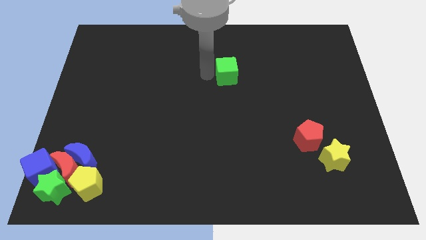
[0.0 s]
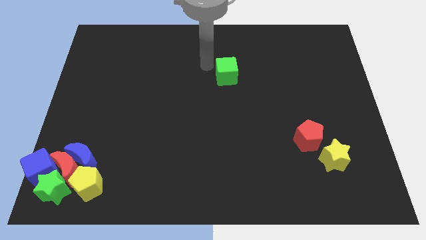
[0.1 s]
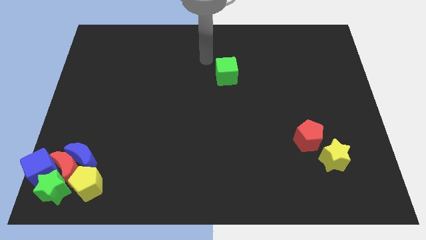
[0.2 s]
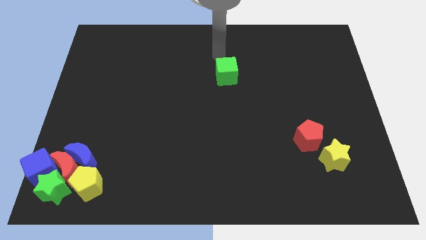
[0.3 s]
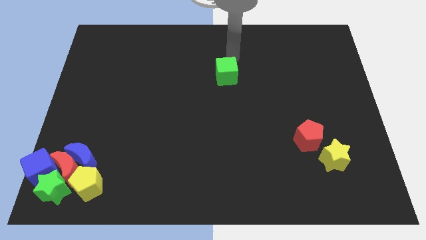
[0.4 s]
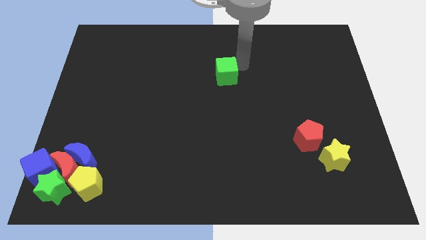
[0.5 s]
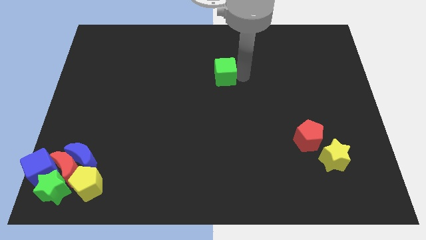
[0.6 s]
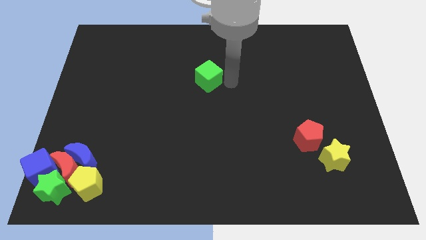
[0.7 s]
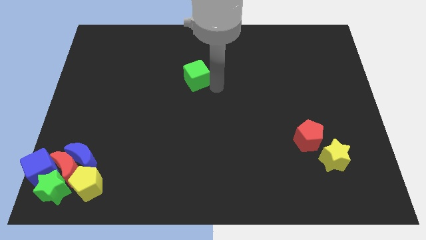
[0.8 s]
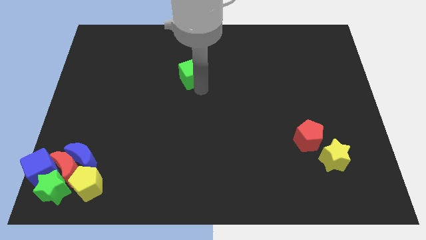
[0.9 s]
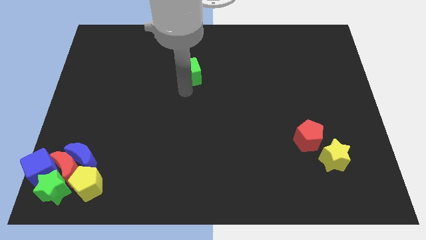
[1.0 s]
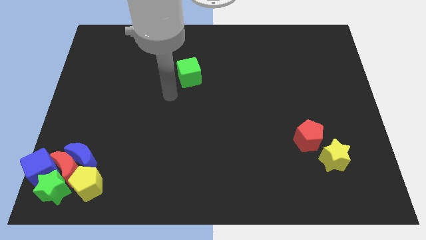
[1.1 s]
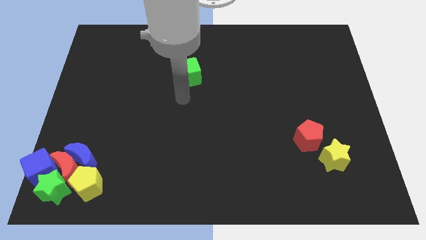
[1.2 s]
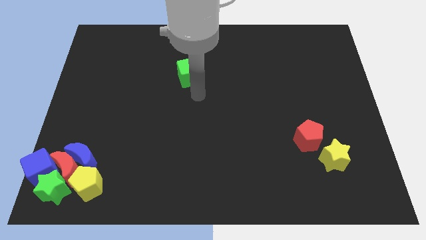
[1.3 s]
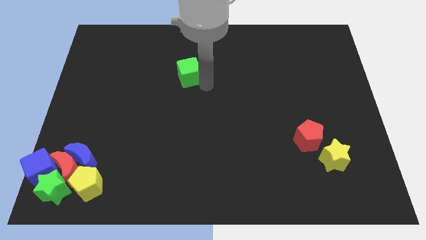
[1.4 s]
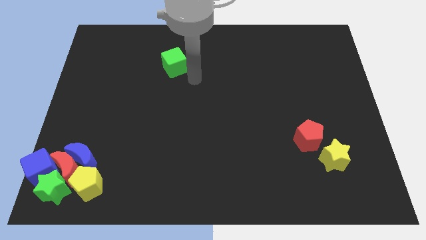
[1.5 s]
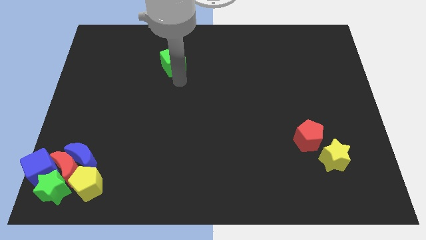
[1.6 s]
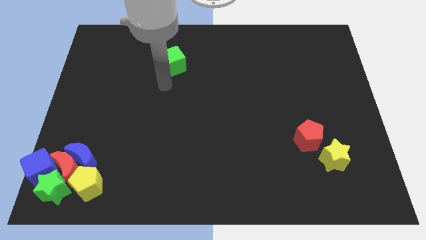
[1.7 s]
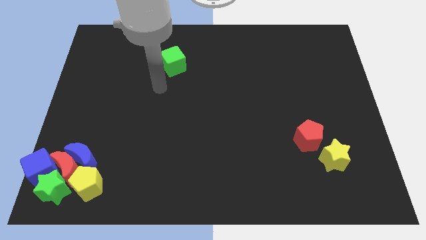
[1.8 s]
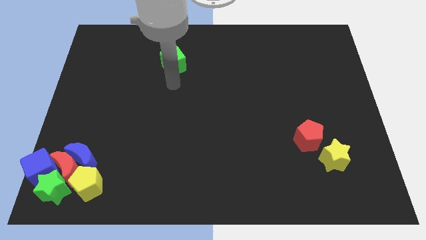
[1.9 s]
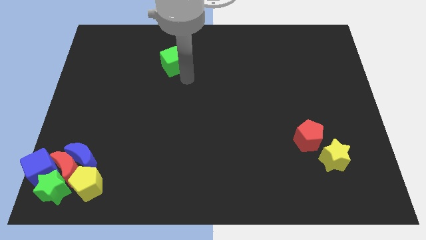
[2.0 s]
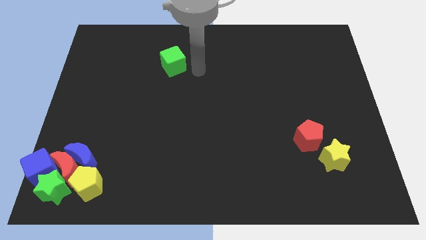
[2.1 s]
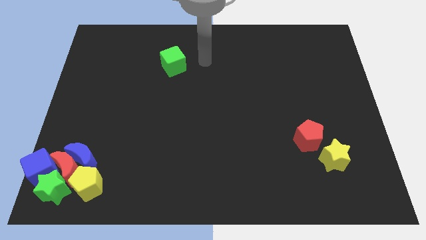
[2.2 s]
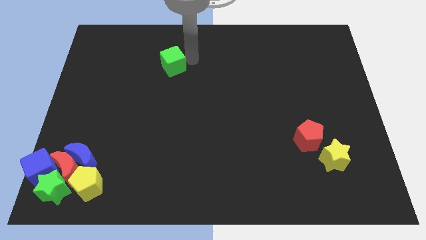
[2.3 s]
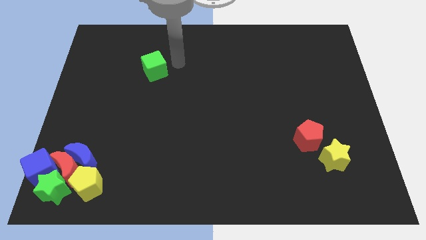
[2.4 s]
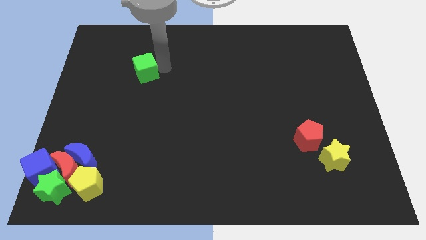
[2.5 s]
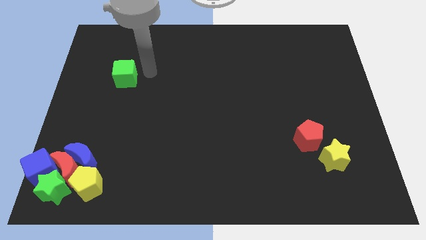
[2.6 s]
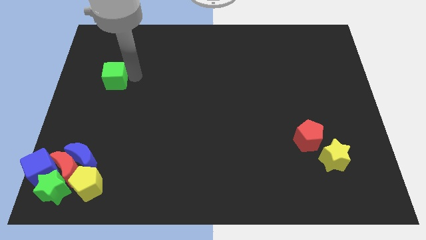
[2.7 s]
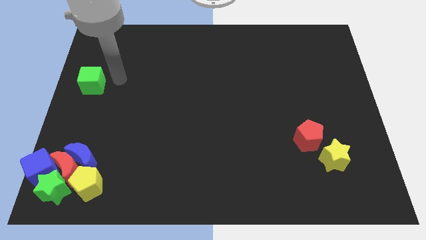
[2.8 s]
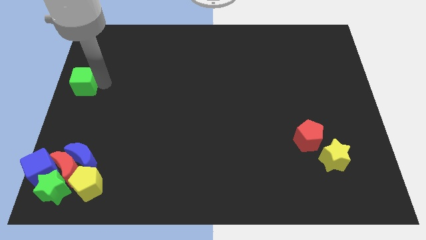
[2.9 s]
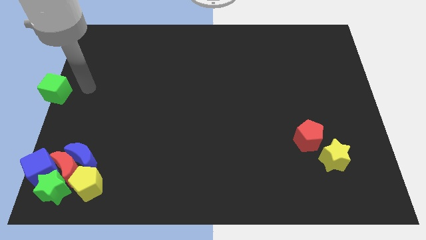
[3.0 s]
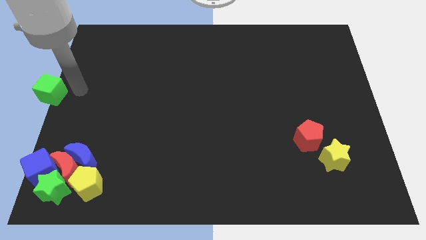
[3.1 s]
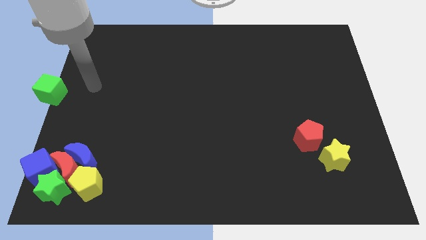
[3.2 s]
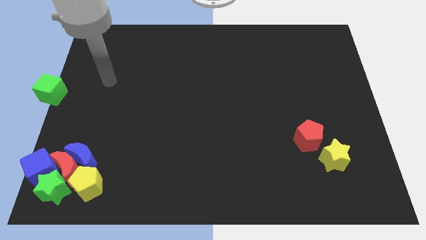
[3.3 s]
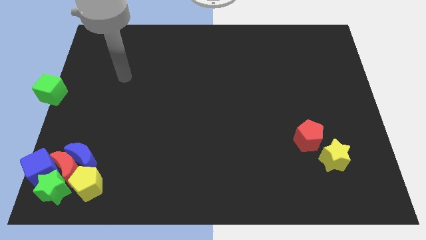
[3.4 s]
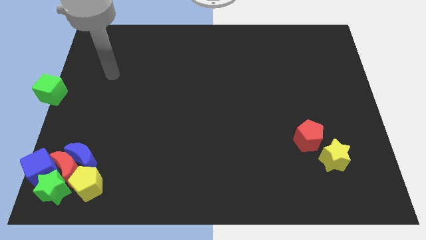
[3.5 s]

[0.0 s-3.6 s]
move the green cube to the left center of the board

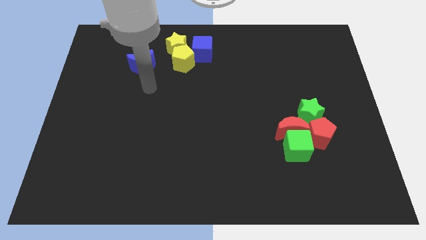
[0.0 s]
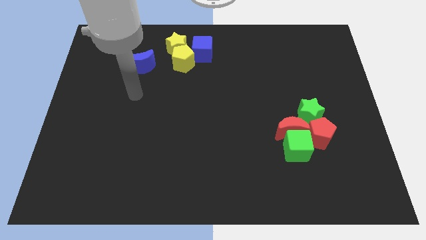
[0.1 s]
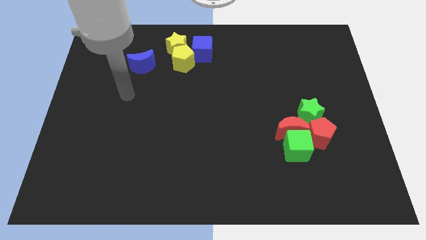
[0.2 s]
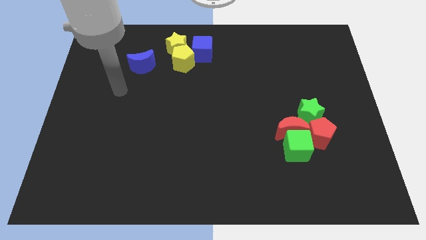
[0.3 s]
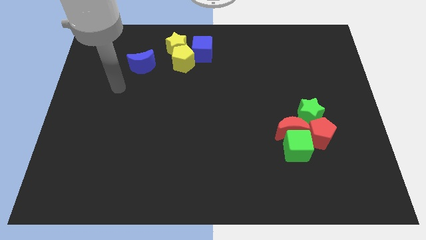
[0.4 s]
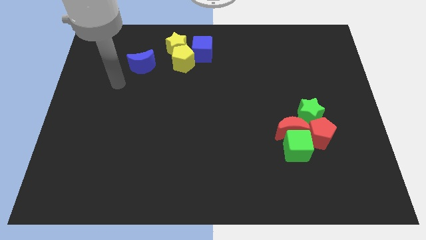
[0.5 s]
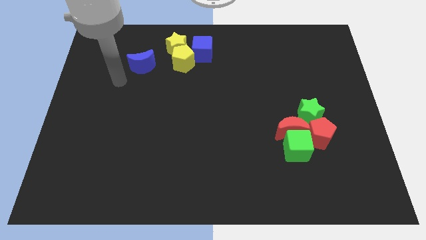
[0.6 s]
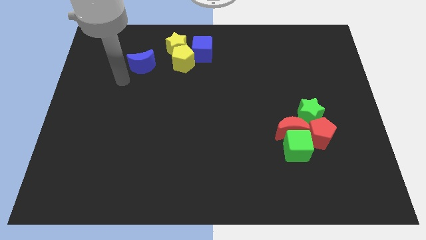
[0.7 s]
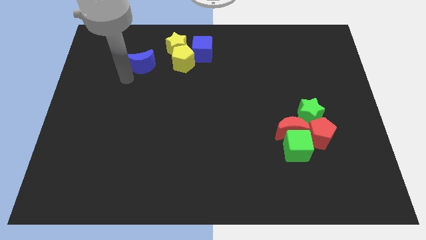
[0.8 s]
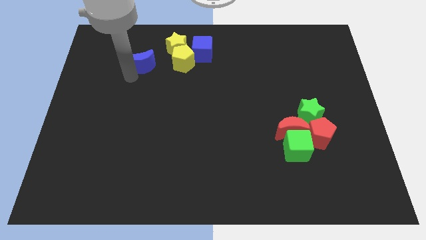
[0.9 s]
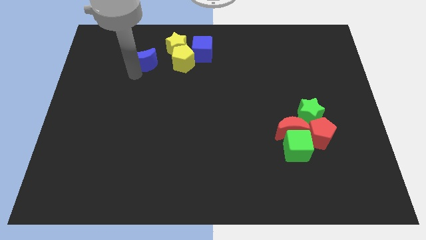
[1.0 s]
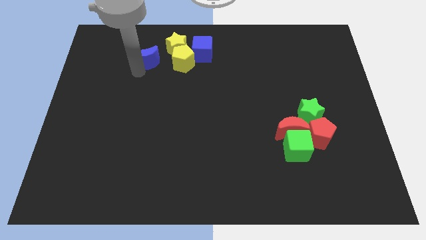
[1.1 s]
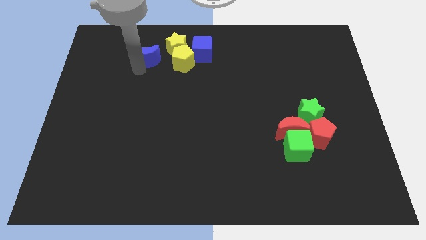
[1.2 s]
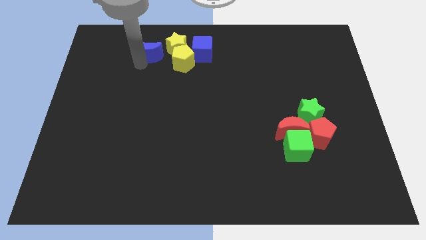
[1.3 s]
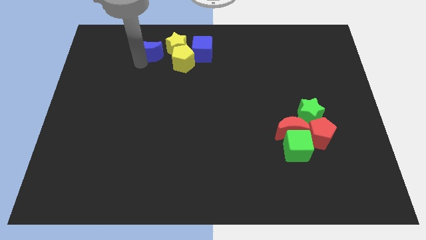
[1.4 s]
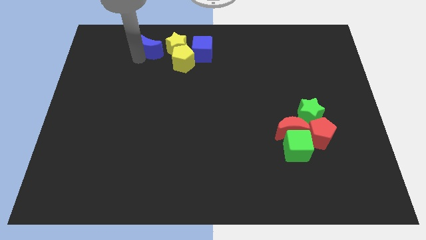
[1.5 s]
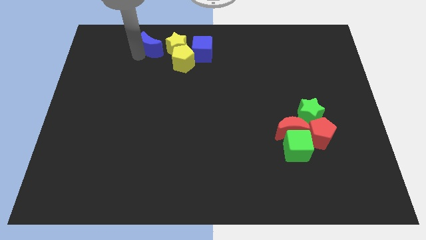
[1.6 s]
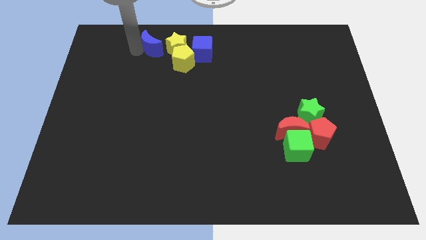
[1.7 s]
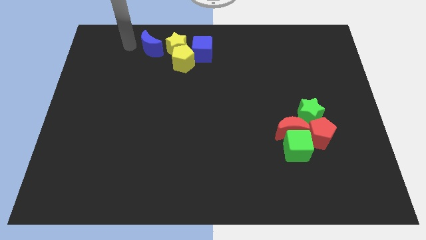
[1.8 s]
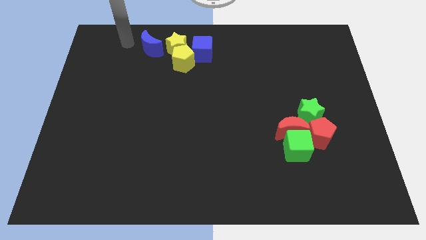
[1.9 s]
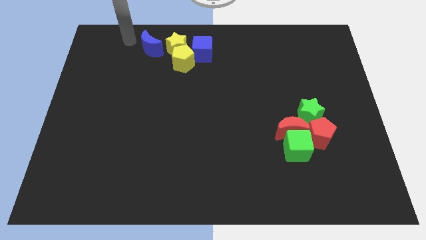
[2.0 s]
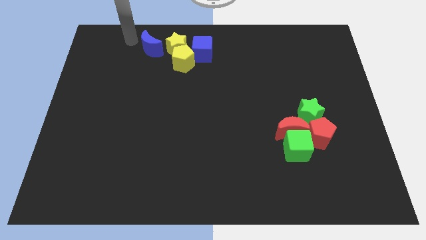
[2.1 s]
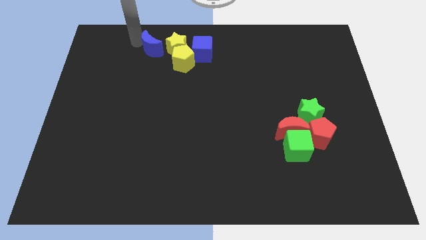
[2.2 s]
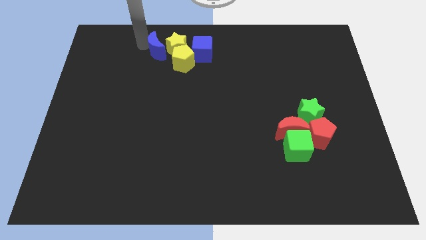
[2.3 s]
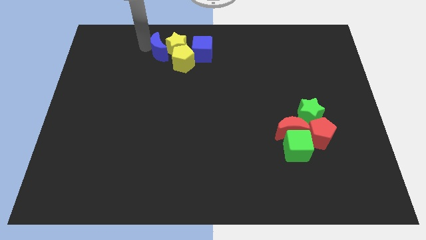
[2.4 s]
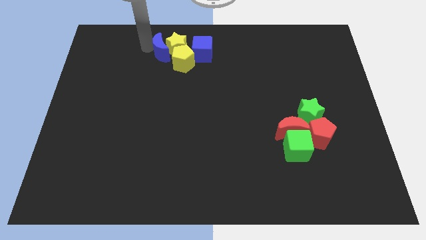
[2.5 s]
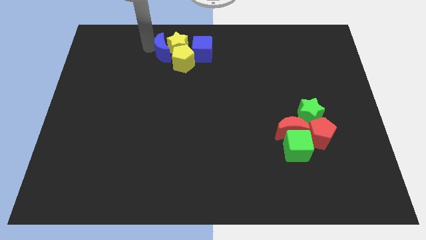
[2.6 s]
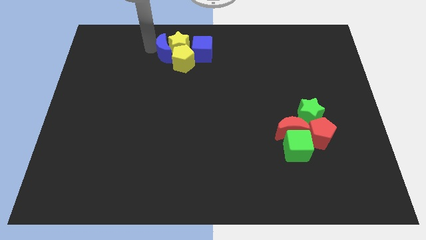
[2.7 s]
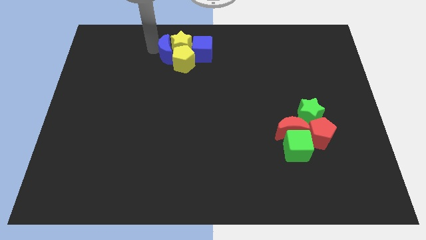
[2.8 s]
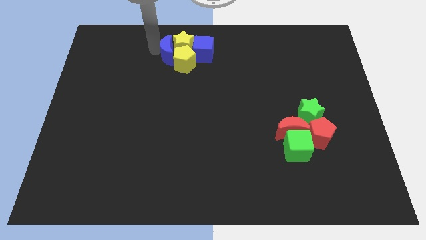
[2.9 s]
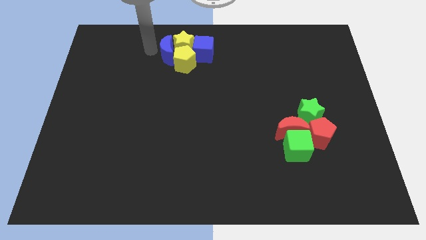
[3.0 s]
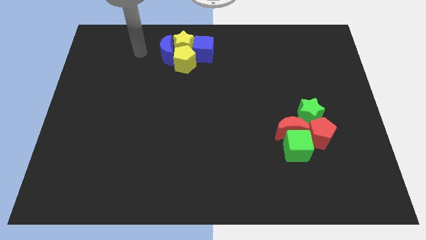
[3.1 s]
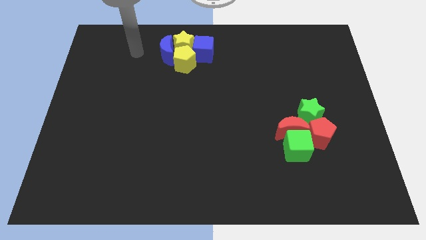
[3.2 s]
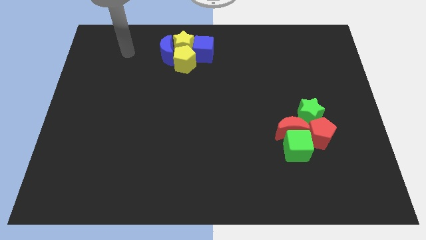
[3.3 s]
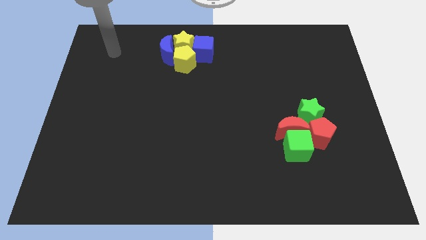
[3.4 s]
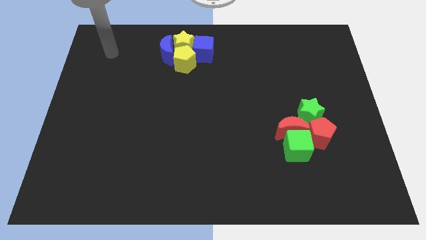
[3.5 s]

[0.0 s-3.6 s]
move the blue crescent into the yellow blocks

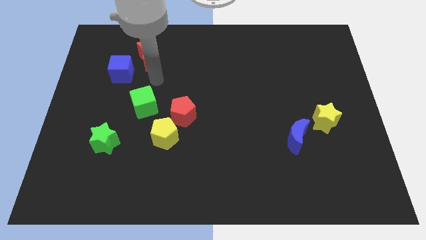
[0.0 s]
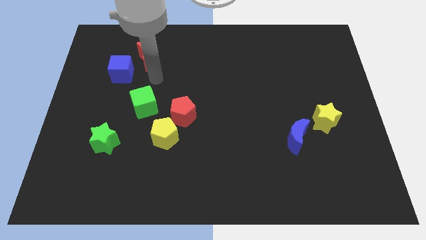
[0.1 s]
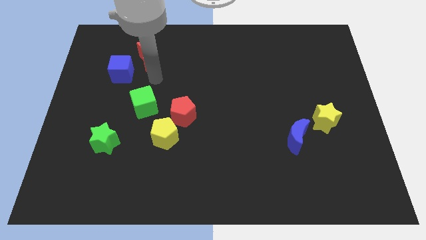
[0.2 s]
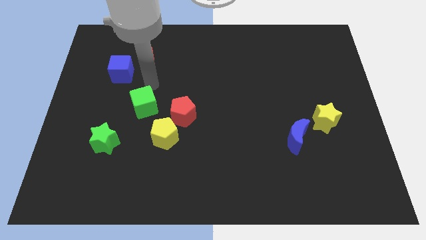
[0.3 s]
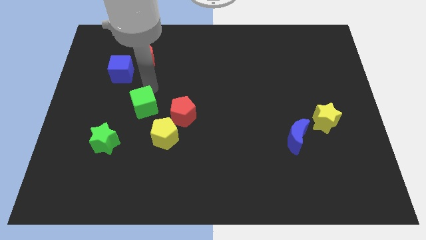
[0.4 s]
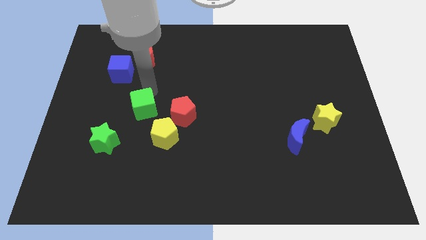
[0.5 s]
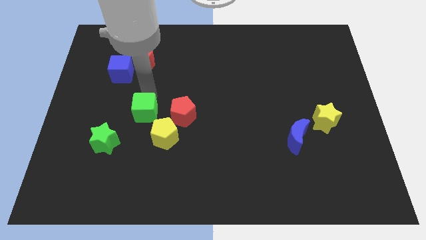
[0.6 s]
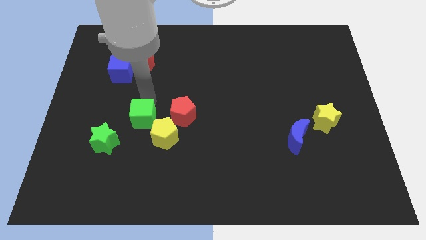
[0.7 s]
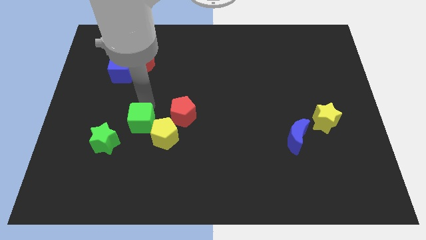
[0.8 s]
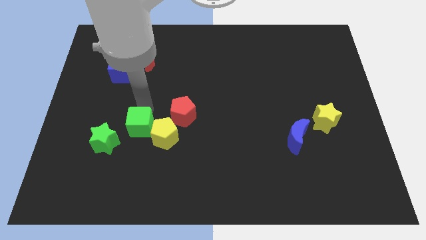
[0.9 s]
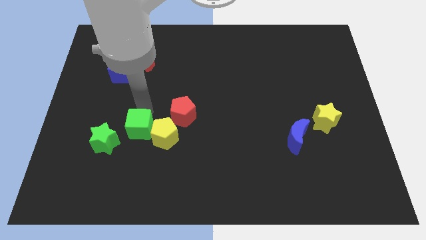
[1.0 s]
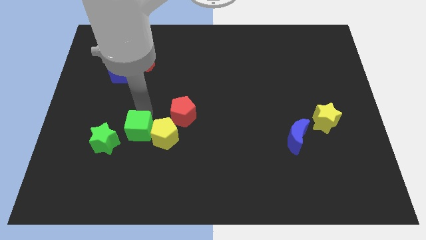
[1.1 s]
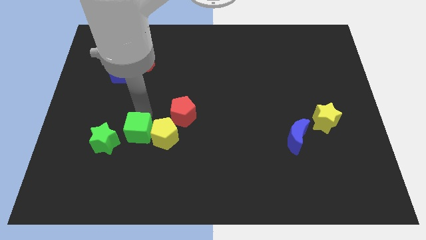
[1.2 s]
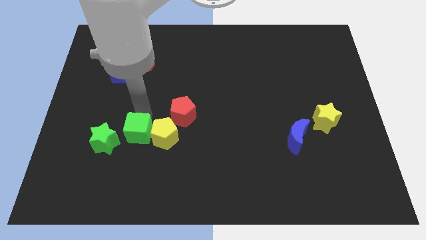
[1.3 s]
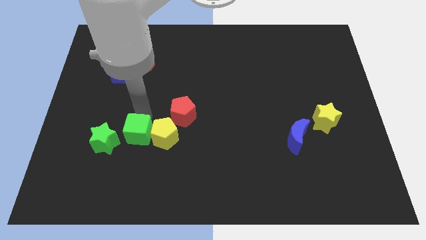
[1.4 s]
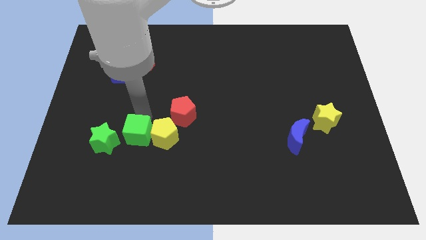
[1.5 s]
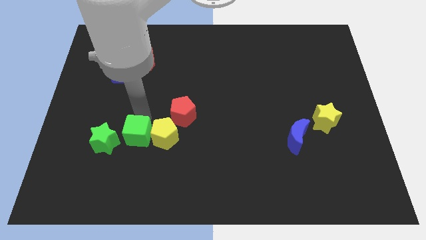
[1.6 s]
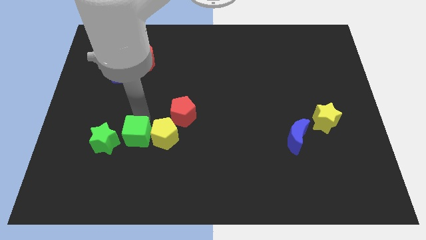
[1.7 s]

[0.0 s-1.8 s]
push the green cube to the left side of the yellow pentagon
